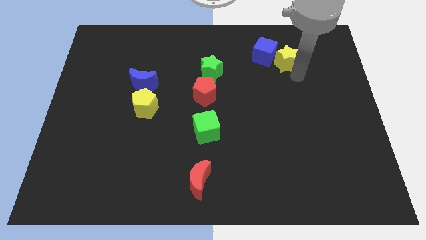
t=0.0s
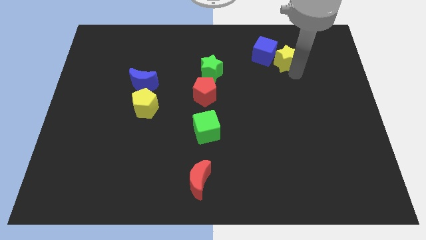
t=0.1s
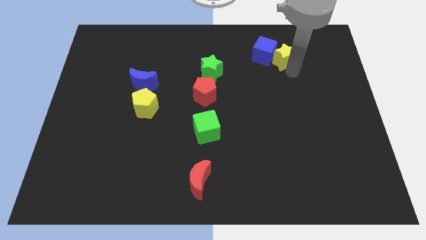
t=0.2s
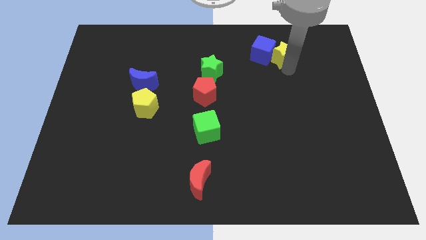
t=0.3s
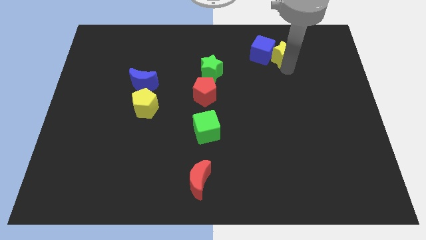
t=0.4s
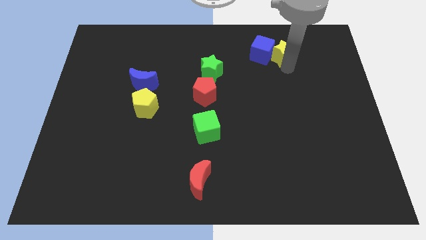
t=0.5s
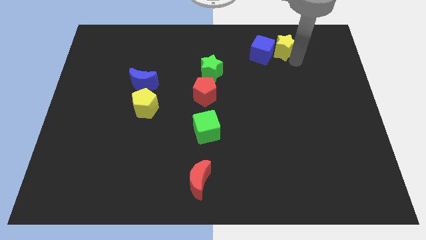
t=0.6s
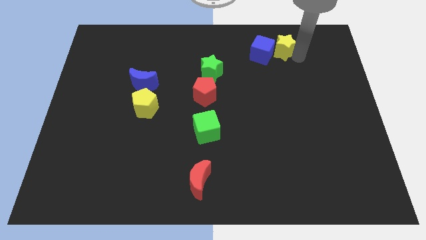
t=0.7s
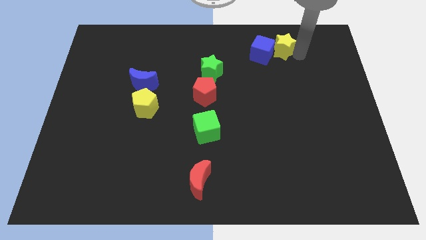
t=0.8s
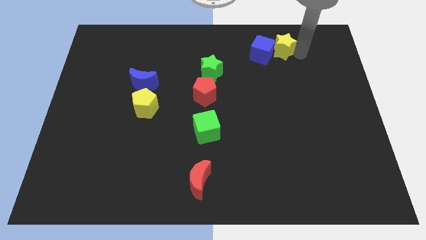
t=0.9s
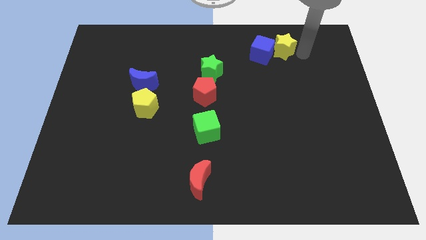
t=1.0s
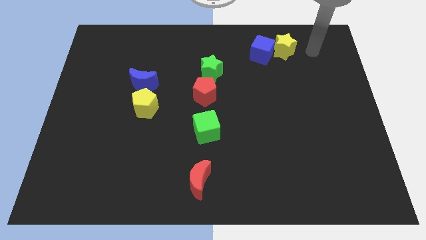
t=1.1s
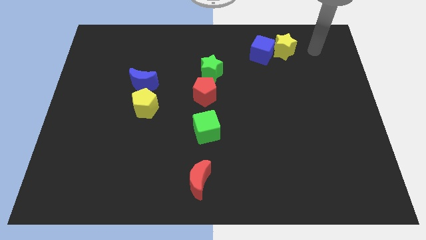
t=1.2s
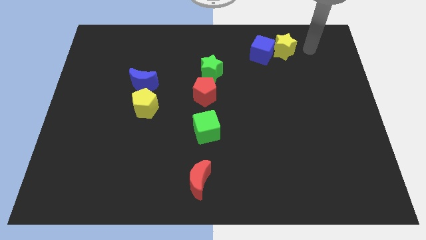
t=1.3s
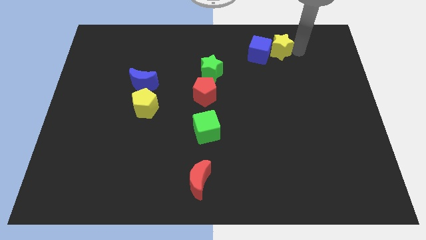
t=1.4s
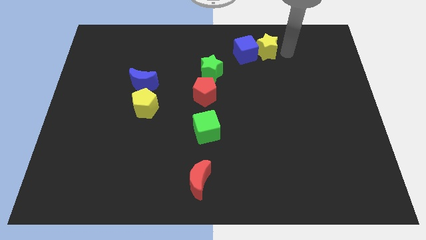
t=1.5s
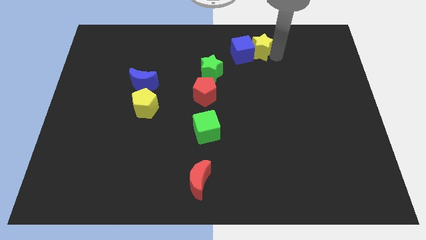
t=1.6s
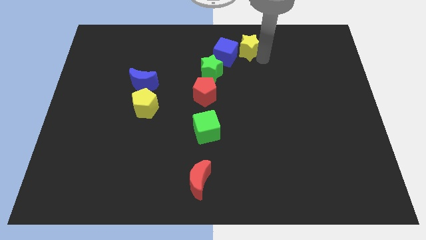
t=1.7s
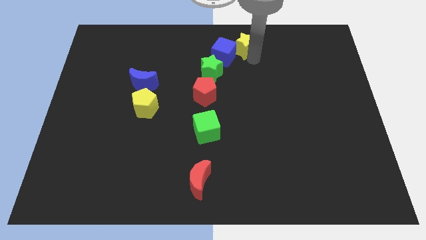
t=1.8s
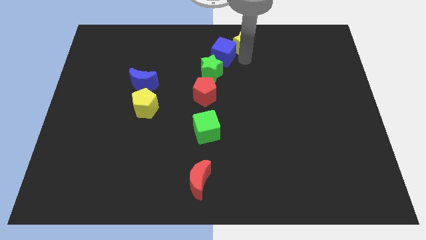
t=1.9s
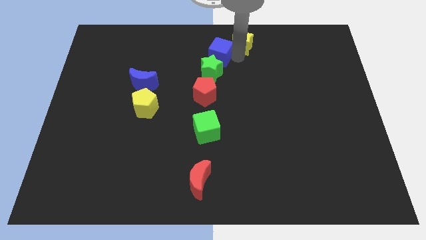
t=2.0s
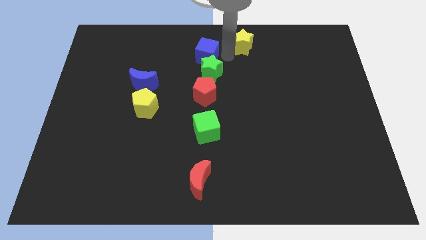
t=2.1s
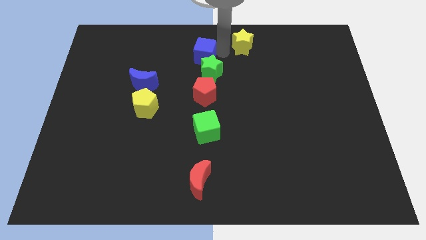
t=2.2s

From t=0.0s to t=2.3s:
push the blue cube slightly above the green star

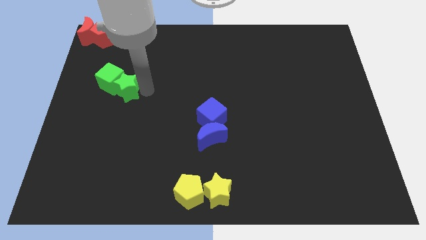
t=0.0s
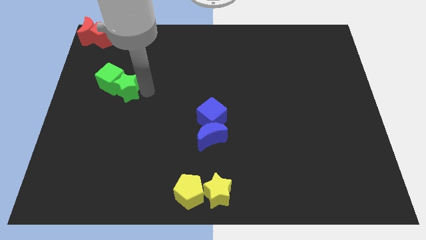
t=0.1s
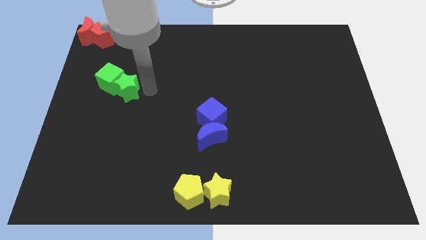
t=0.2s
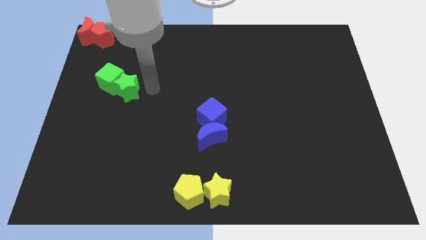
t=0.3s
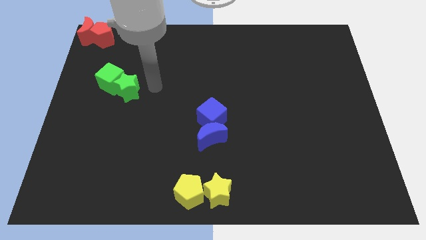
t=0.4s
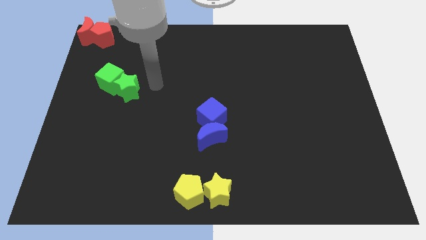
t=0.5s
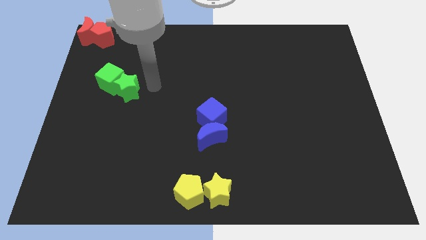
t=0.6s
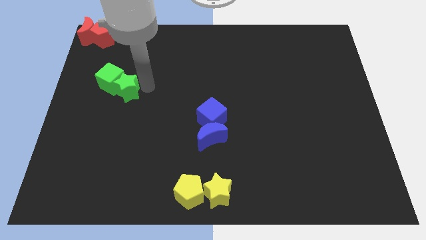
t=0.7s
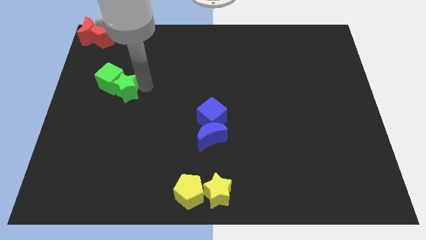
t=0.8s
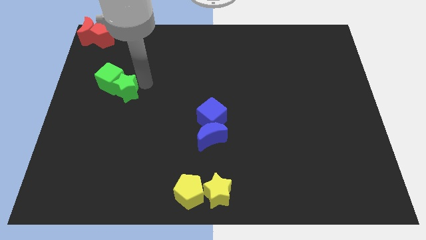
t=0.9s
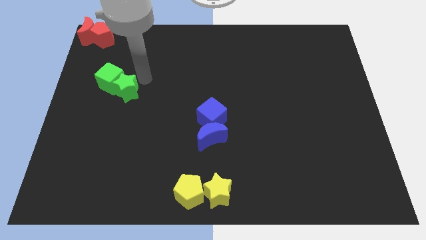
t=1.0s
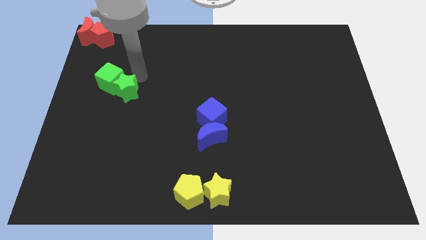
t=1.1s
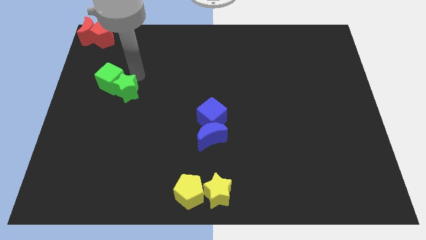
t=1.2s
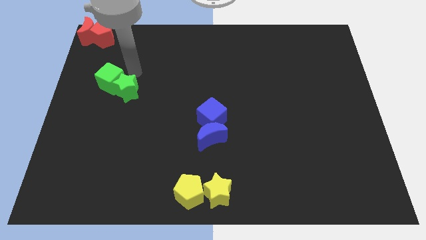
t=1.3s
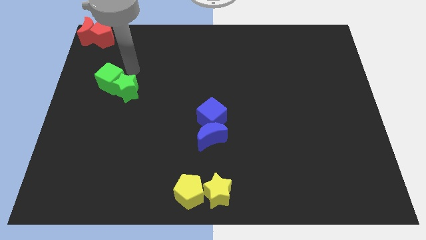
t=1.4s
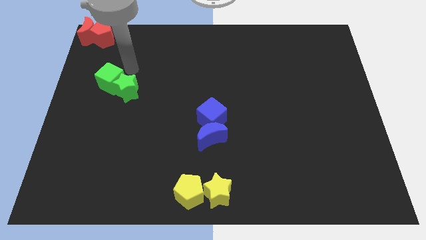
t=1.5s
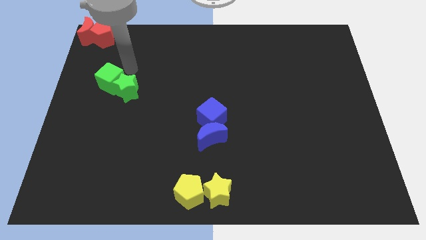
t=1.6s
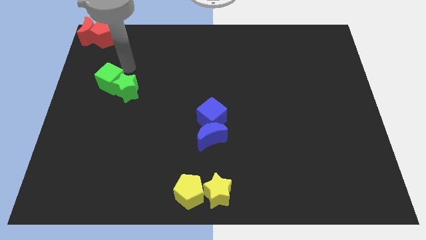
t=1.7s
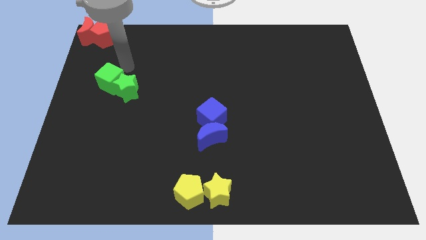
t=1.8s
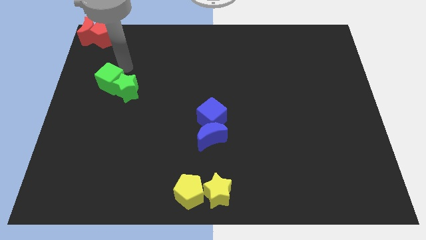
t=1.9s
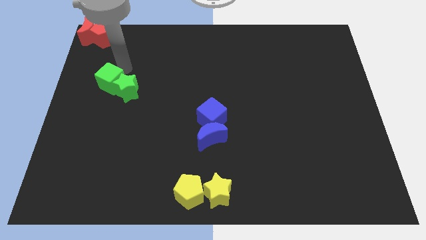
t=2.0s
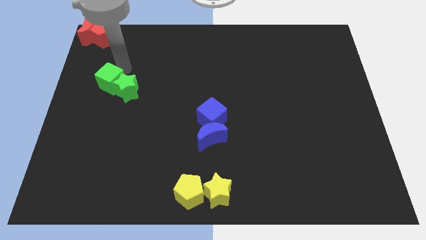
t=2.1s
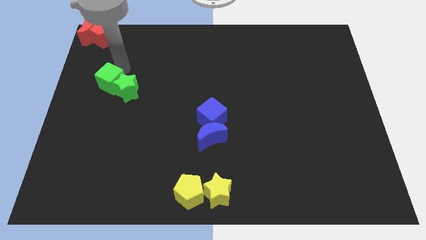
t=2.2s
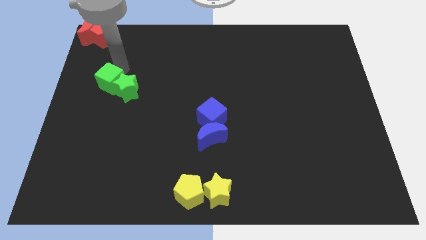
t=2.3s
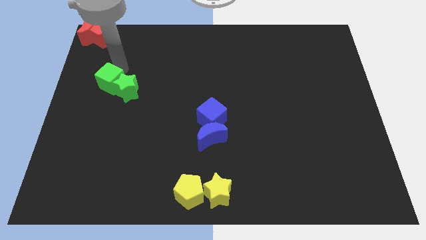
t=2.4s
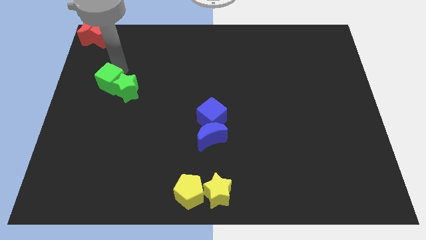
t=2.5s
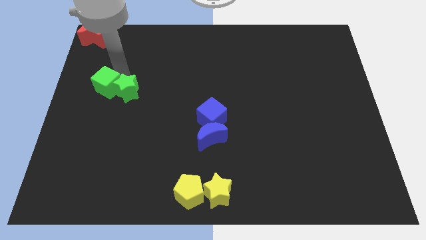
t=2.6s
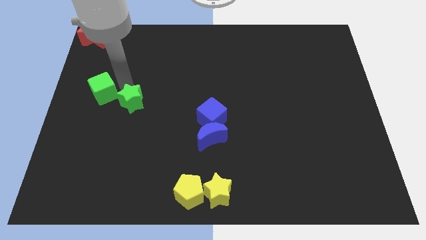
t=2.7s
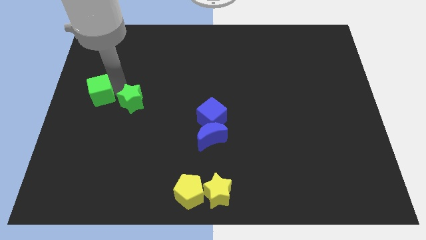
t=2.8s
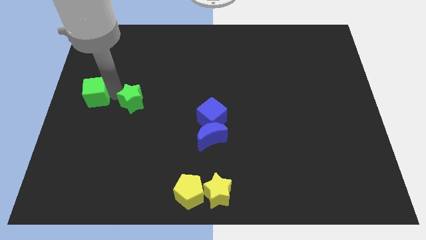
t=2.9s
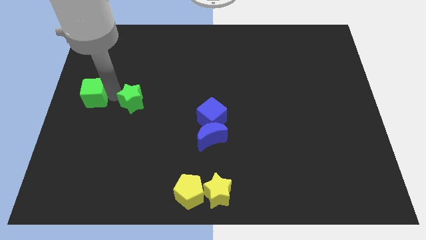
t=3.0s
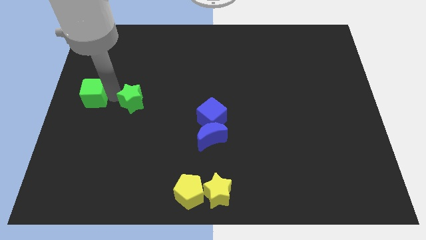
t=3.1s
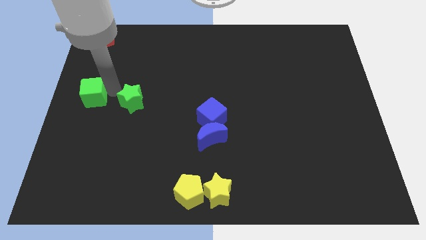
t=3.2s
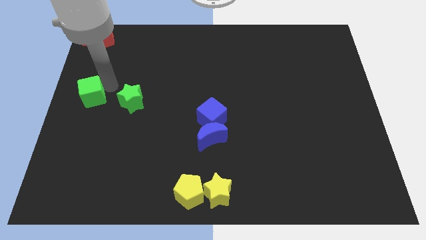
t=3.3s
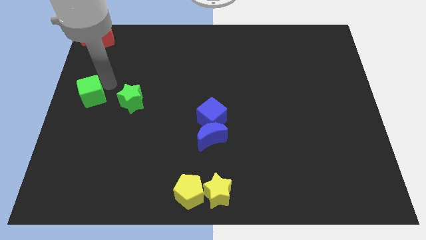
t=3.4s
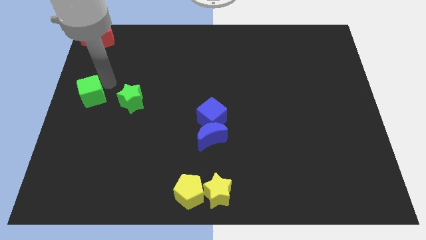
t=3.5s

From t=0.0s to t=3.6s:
separate green cube and green star

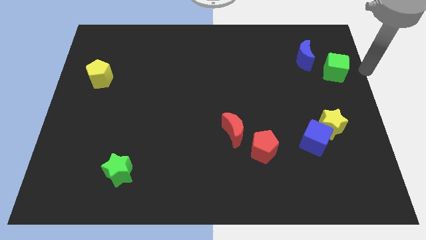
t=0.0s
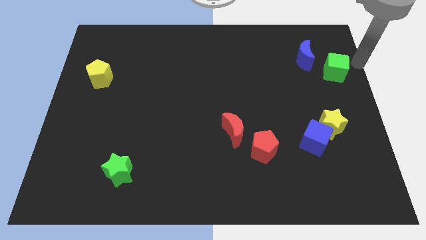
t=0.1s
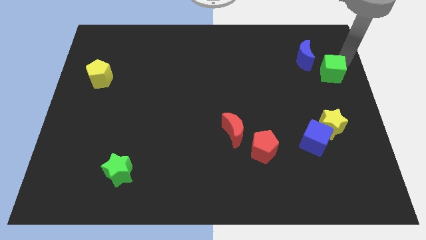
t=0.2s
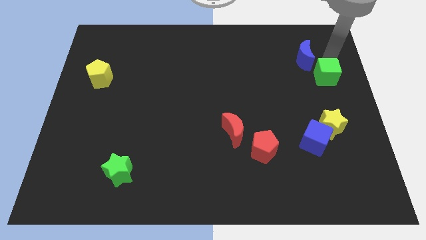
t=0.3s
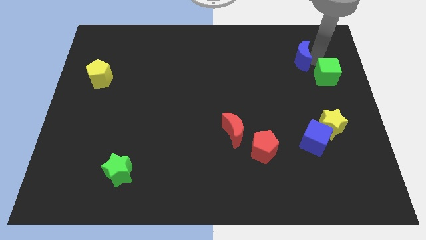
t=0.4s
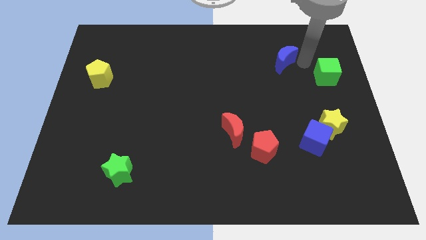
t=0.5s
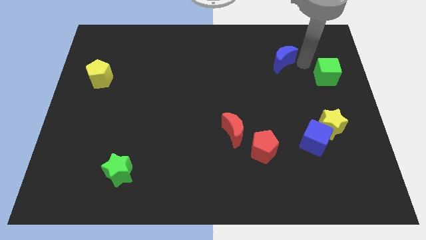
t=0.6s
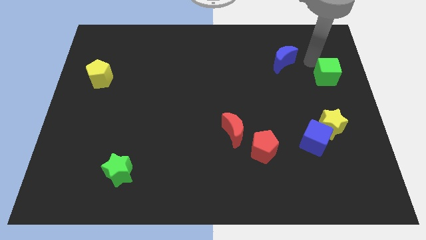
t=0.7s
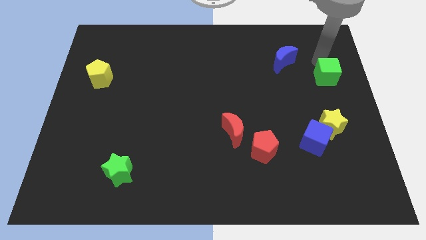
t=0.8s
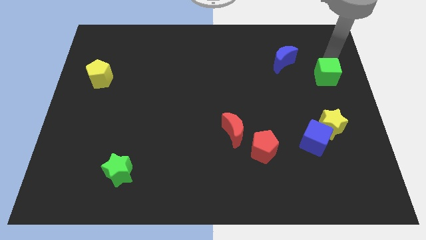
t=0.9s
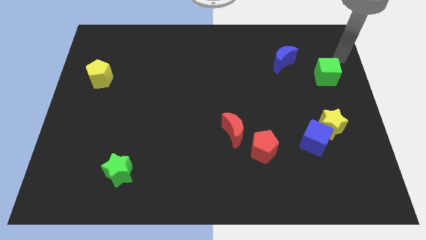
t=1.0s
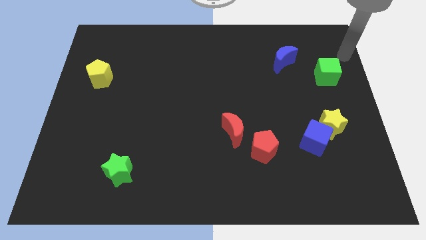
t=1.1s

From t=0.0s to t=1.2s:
move blue moon slightly left

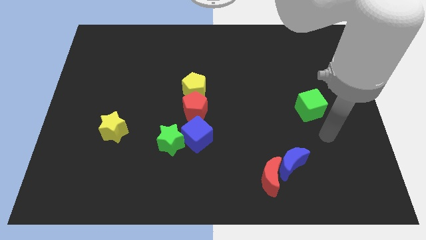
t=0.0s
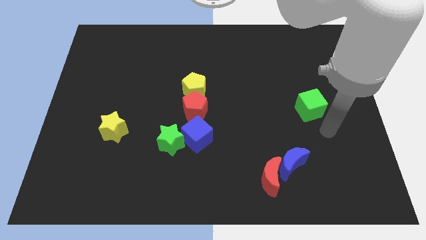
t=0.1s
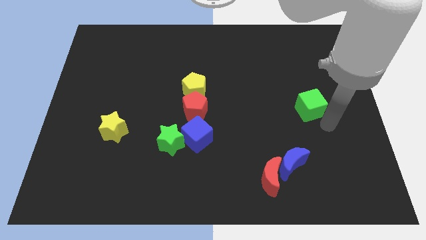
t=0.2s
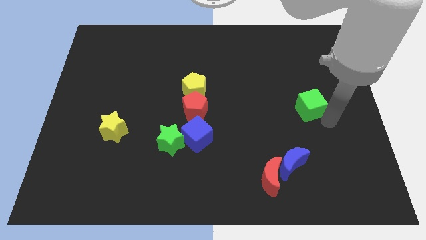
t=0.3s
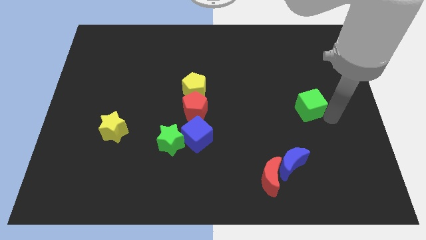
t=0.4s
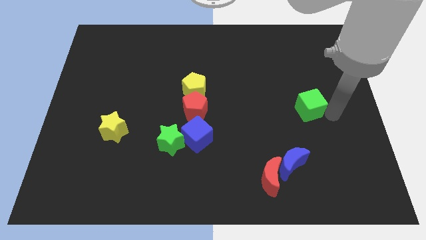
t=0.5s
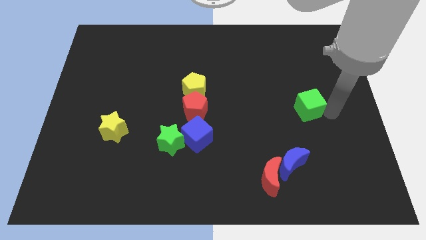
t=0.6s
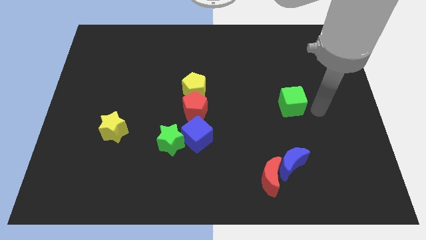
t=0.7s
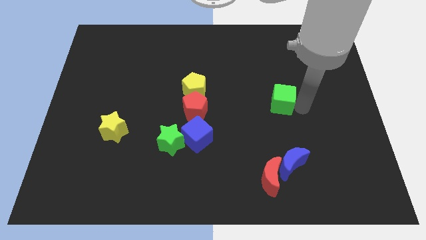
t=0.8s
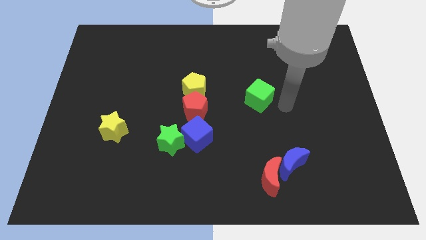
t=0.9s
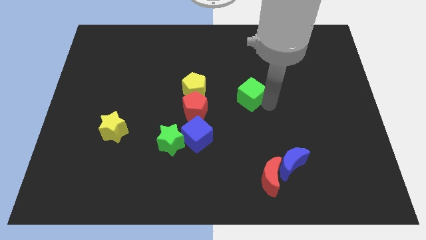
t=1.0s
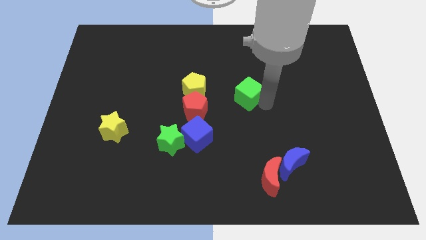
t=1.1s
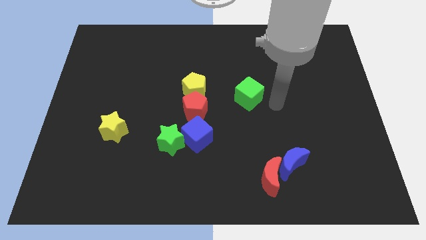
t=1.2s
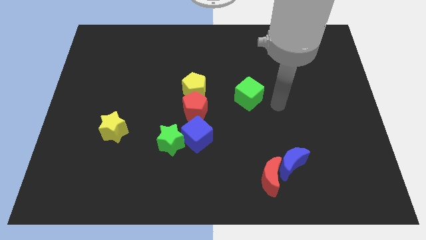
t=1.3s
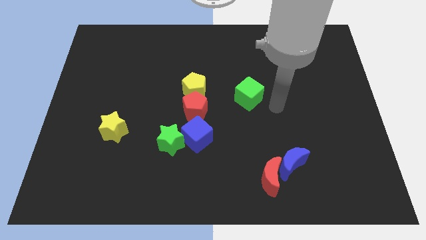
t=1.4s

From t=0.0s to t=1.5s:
move the green cube towards the center of the board

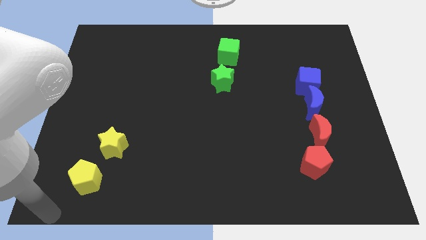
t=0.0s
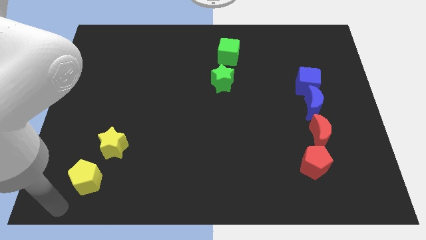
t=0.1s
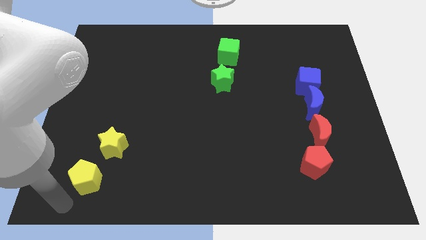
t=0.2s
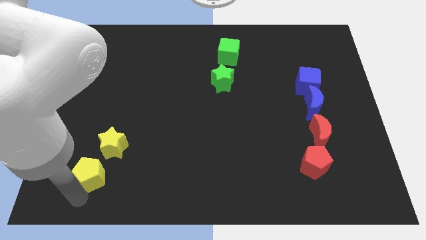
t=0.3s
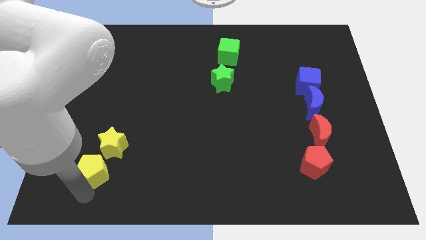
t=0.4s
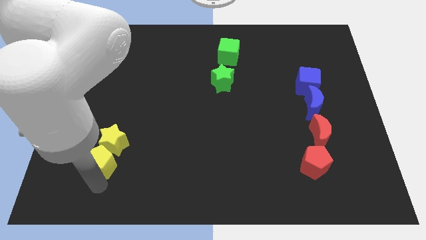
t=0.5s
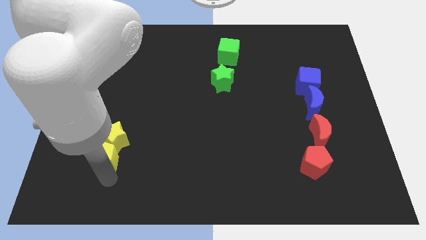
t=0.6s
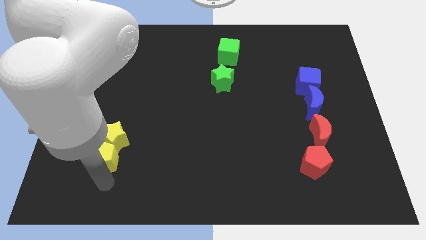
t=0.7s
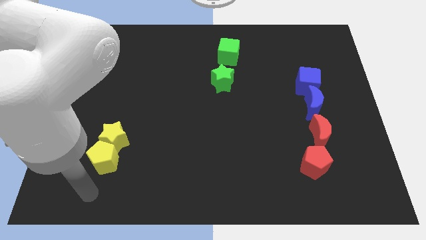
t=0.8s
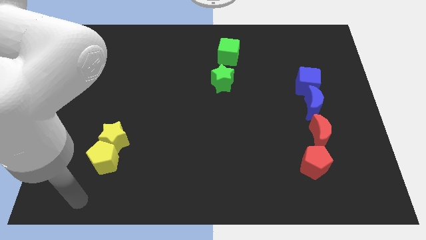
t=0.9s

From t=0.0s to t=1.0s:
push the yellow pentagon into the yellow star
